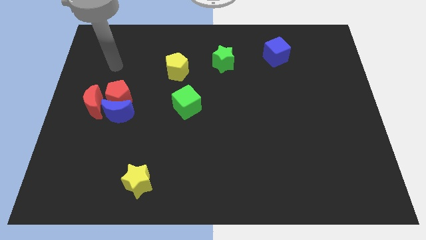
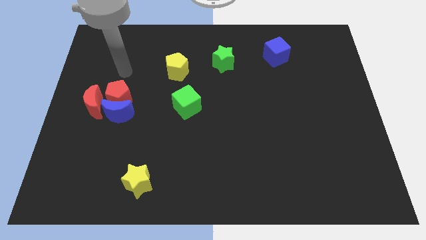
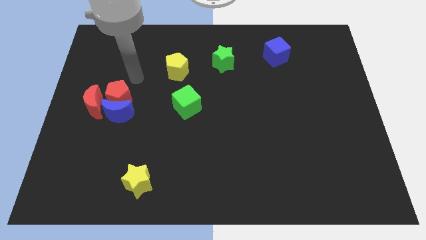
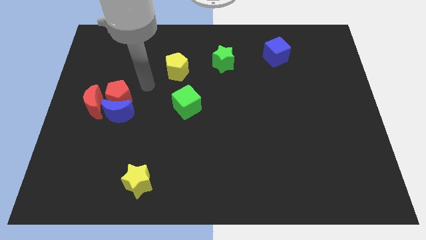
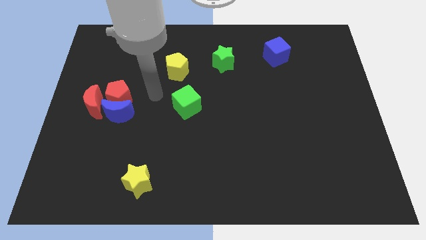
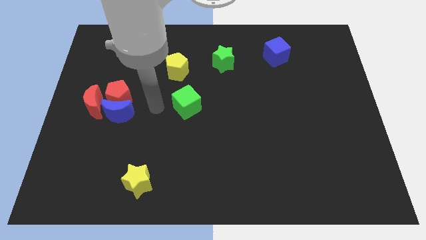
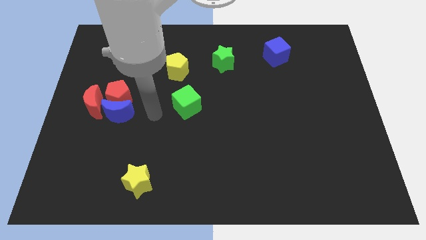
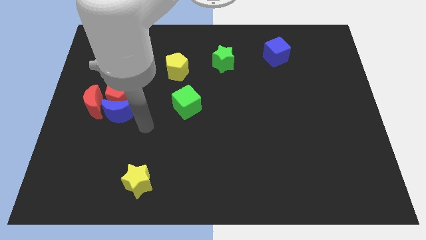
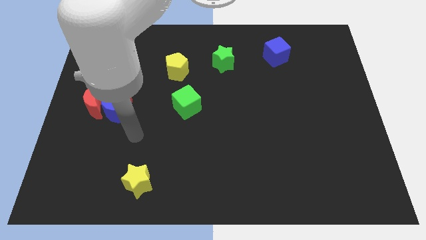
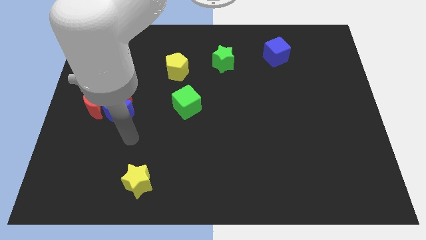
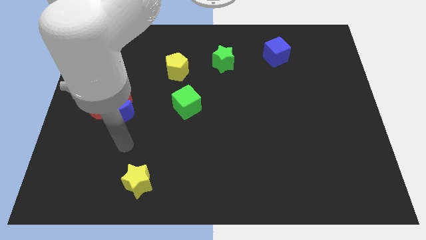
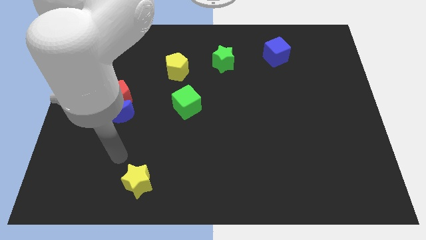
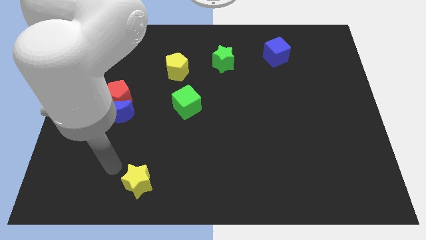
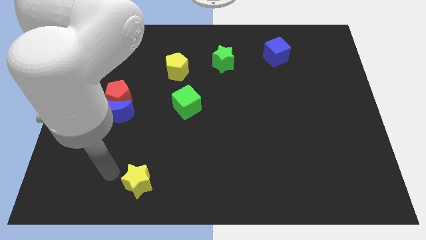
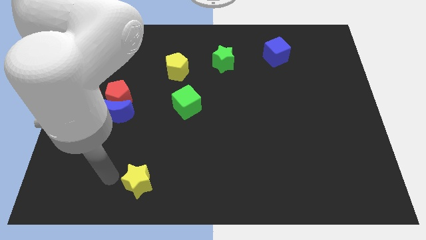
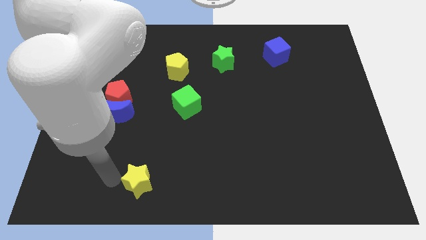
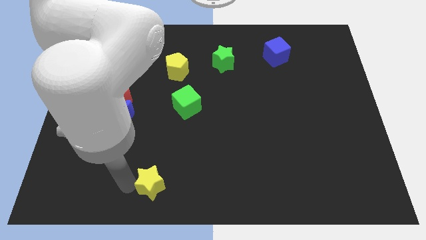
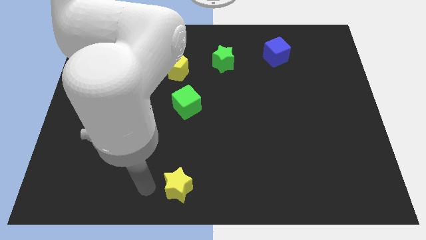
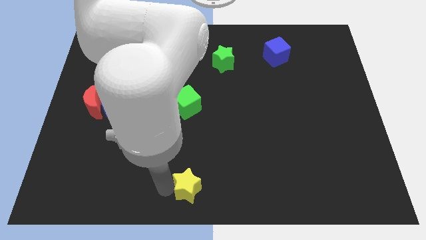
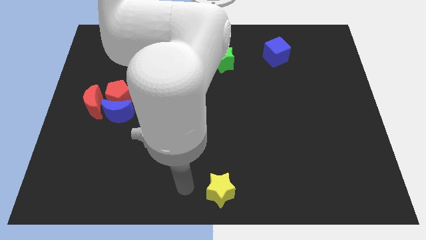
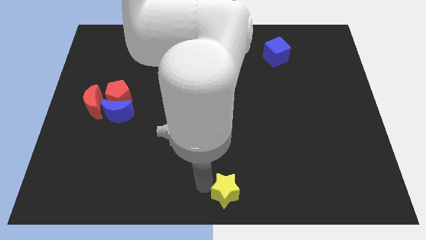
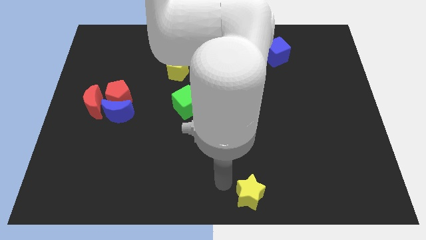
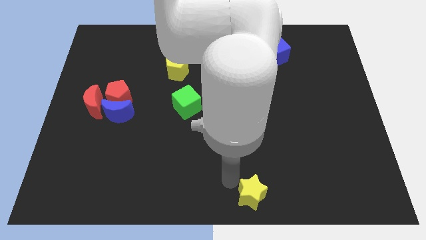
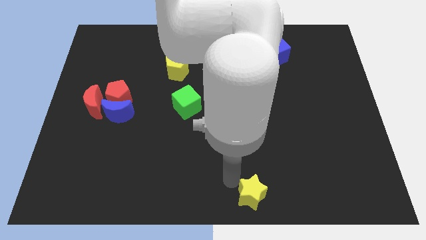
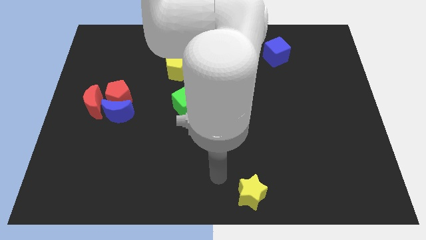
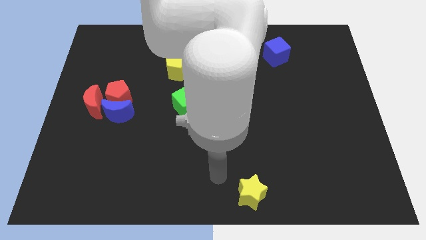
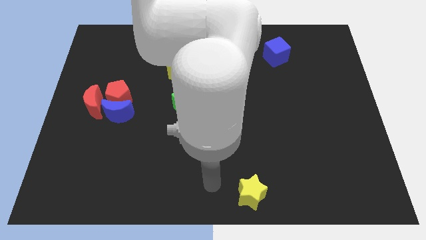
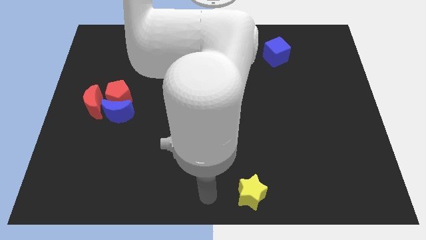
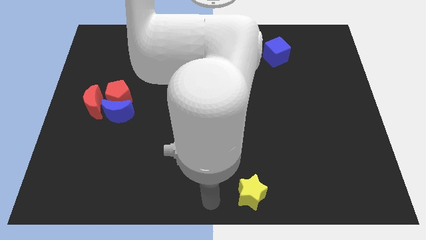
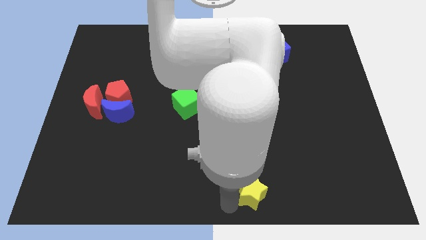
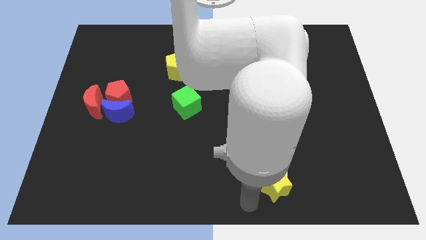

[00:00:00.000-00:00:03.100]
move the yellow star to the bottom right of the board

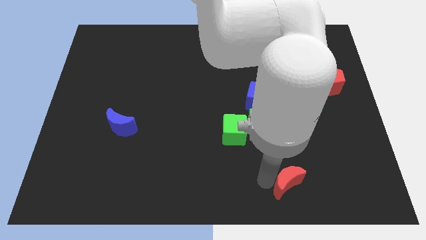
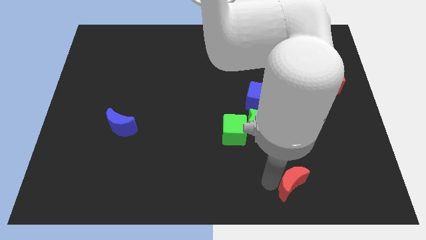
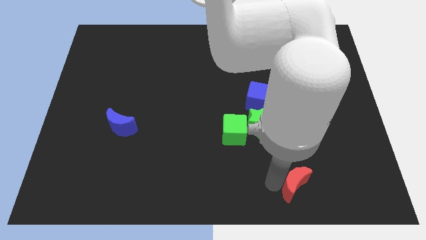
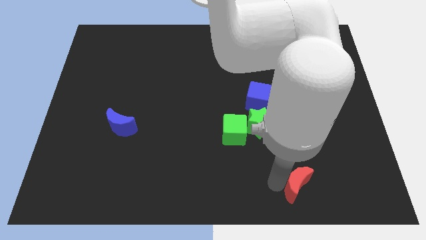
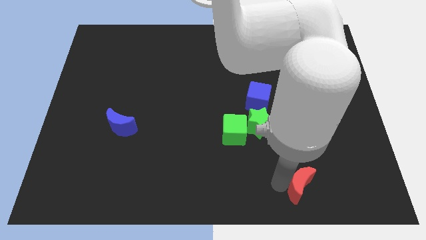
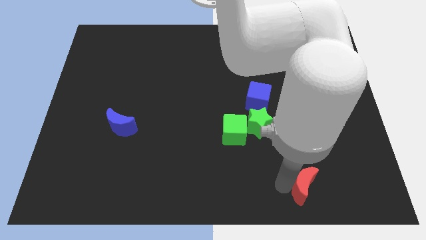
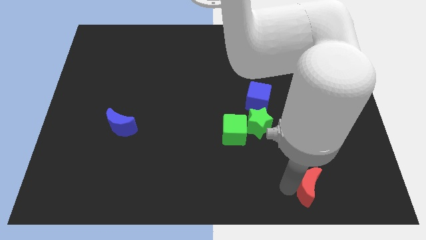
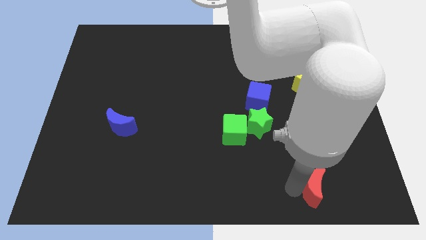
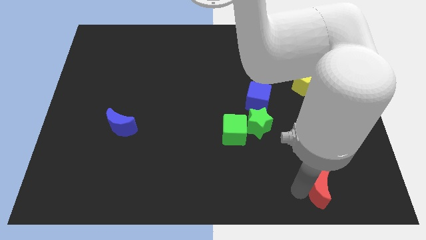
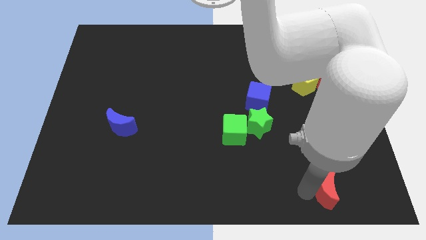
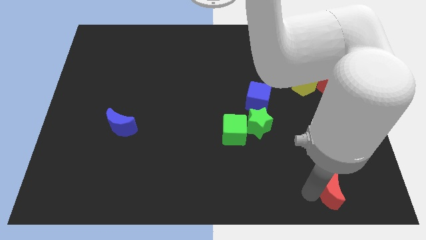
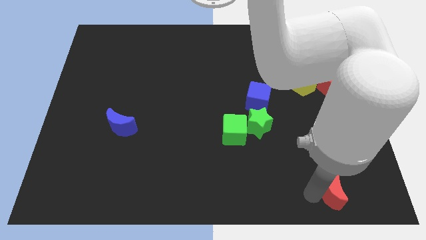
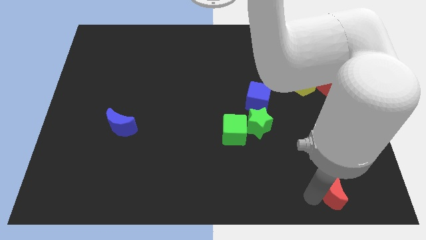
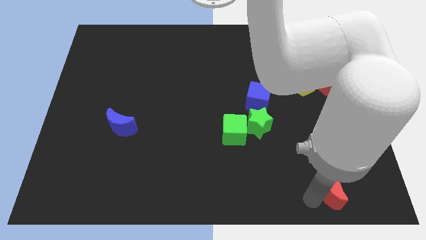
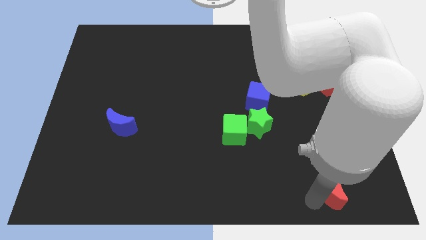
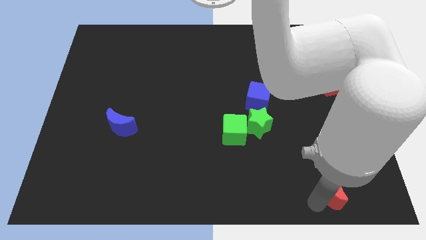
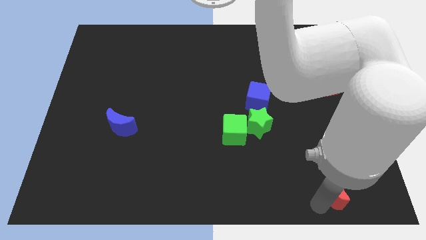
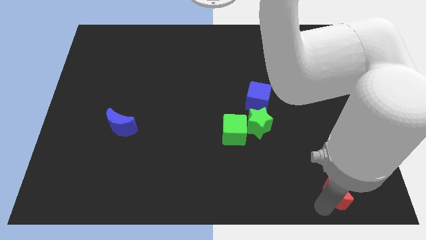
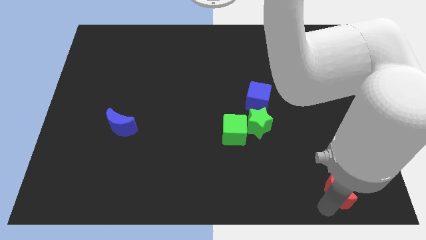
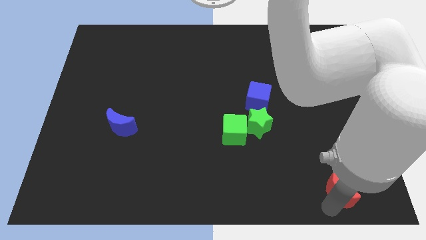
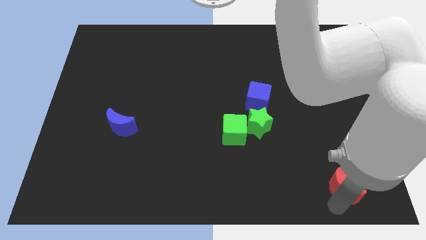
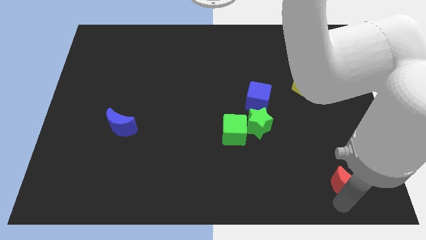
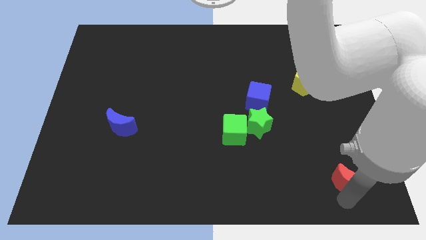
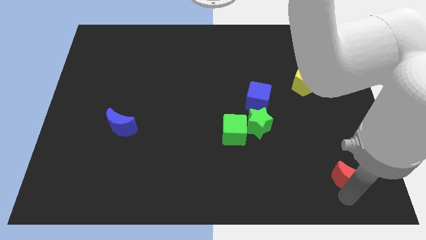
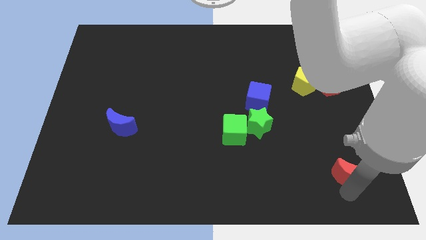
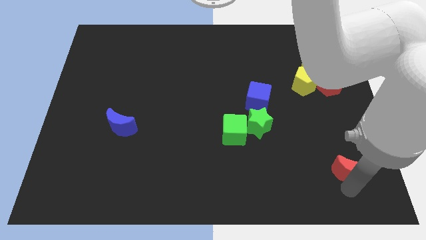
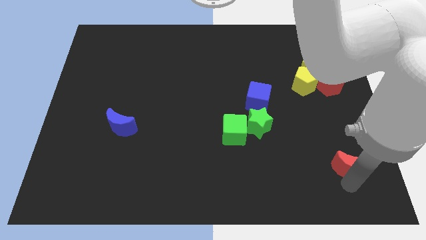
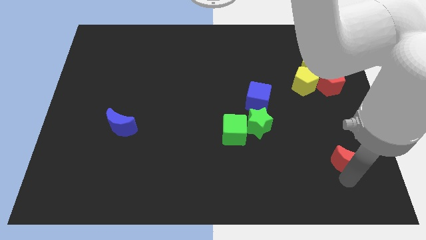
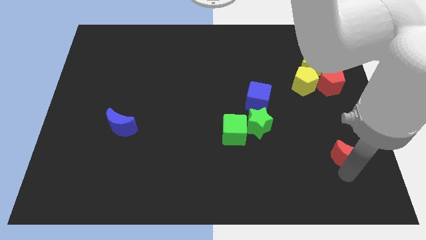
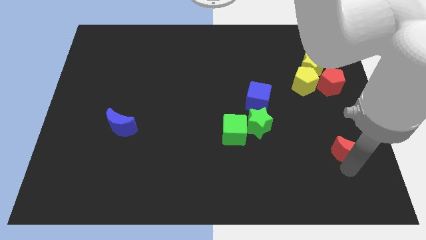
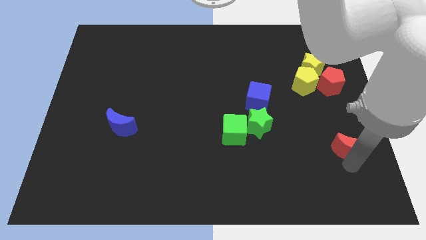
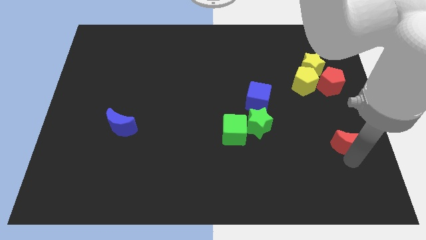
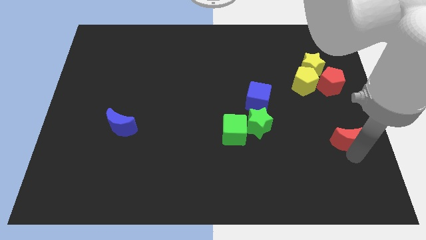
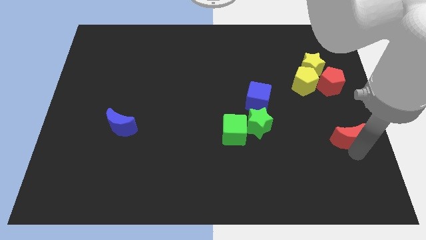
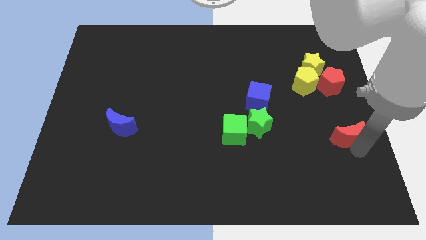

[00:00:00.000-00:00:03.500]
place red moon parallel to the right of green cube

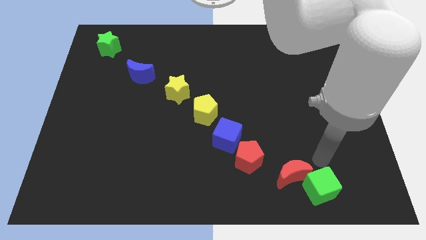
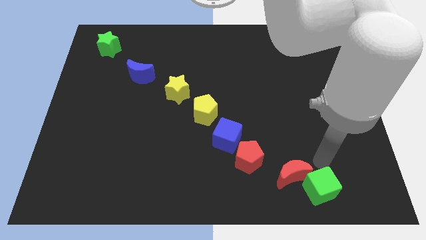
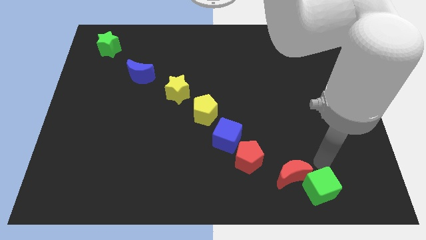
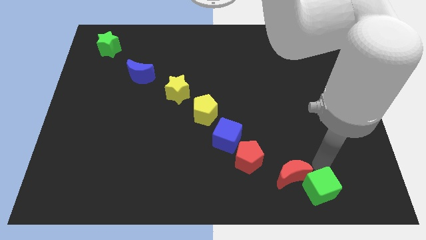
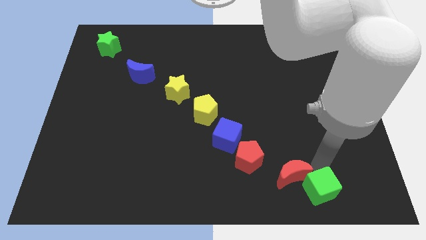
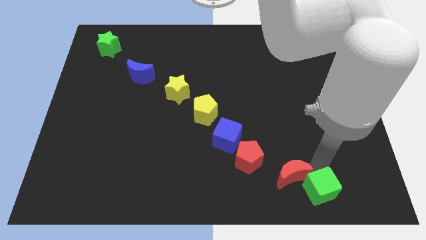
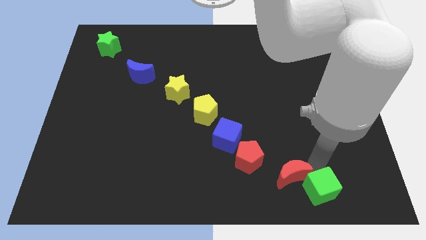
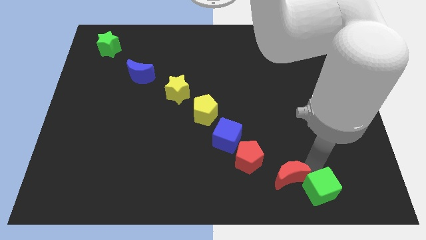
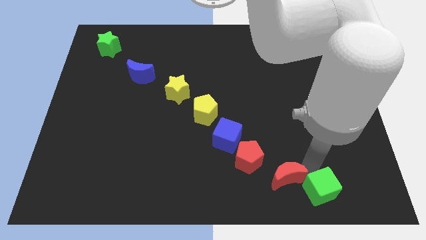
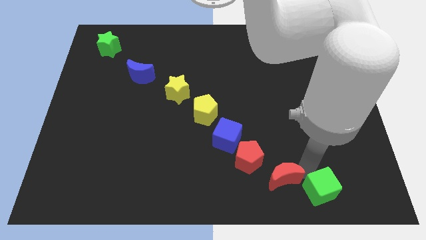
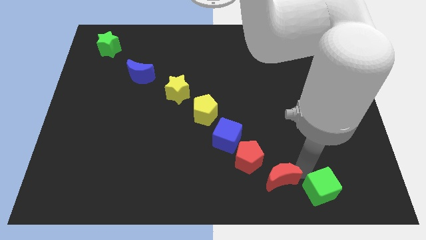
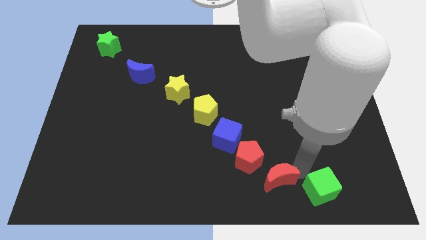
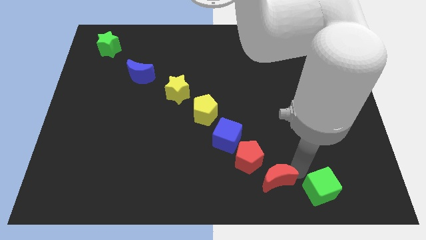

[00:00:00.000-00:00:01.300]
slightly push red moon near to red pentagon

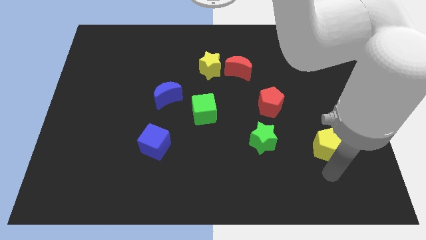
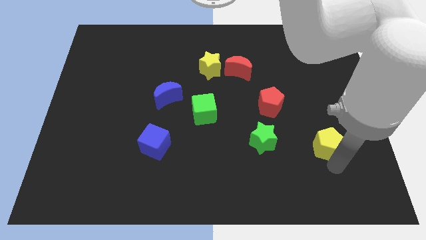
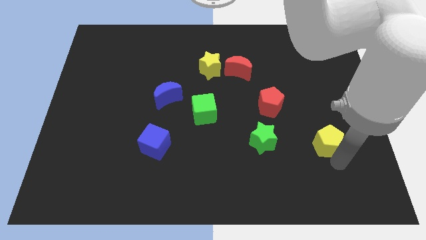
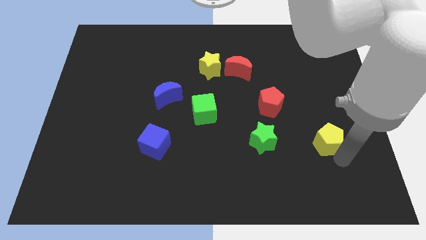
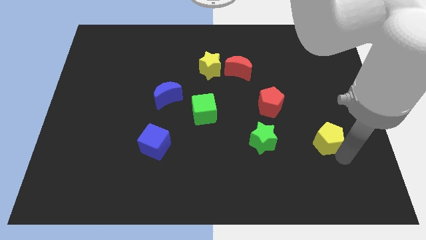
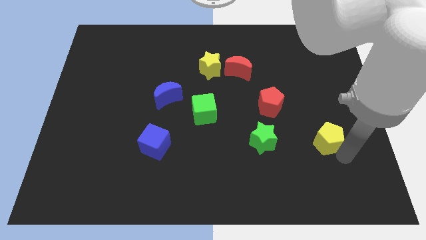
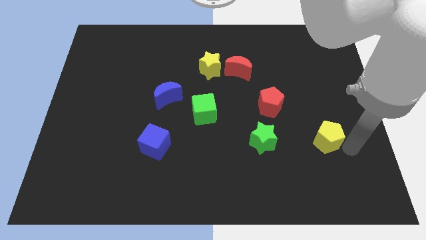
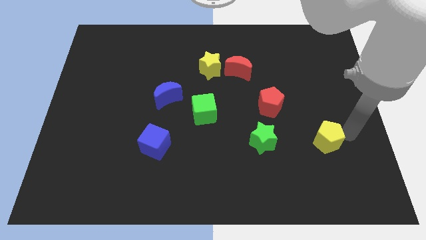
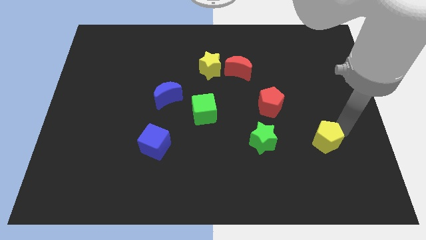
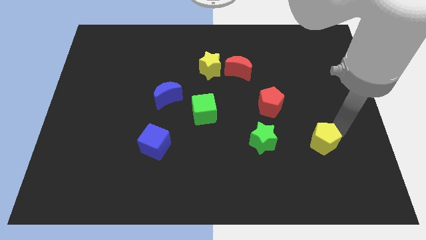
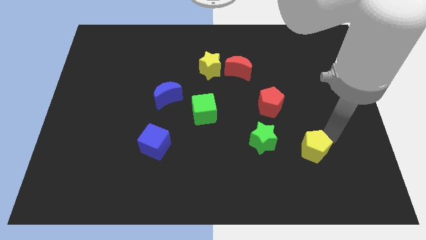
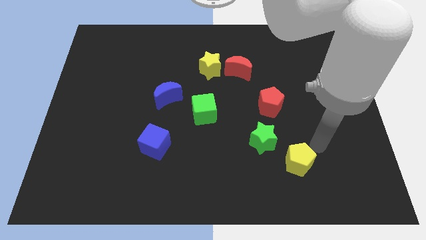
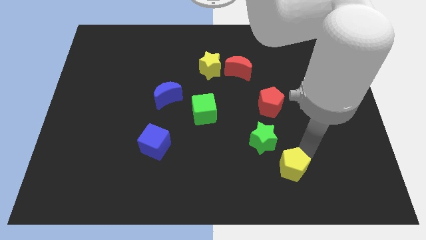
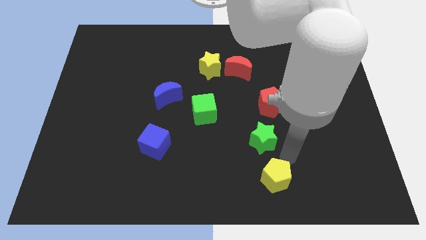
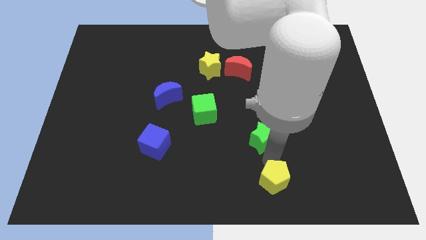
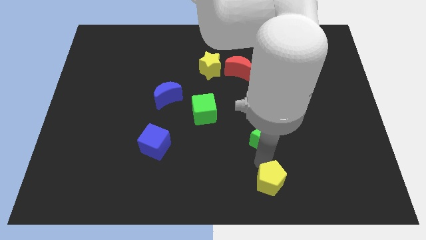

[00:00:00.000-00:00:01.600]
place the yellow pentagon below the green star
